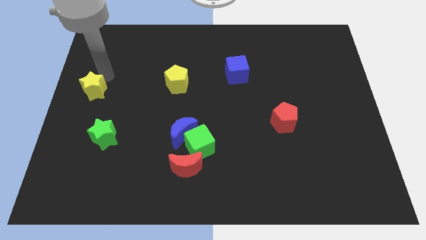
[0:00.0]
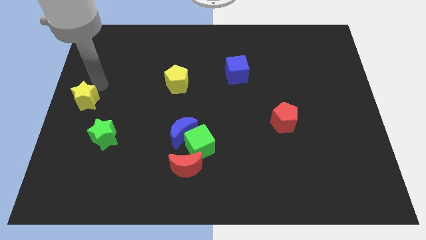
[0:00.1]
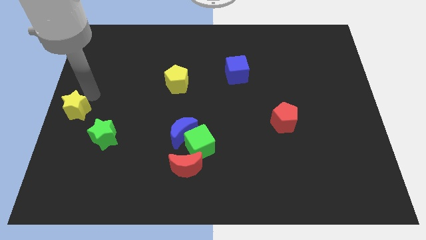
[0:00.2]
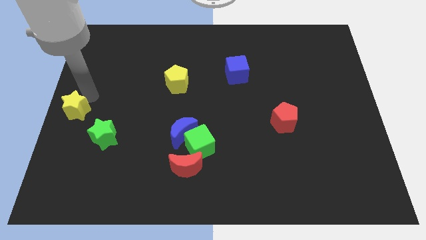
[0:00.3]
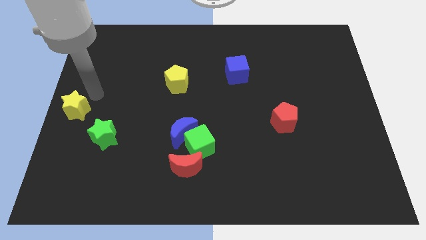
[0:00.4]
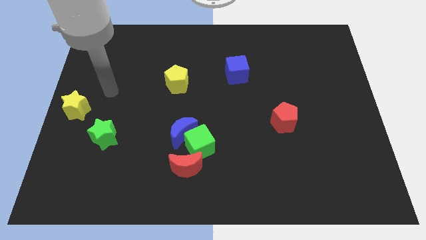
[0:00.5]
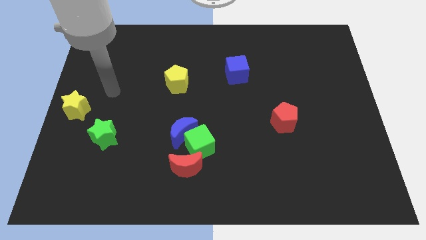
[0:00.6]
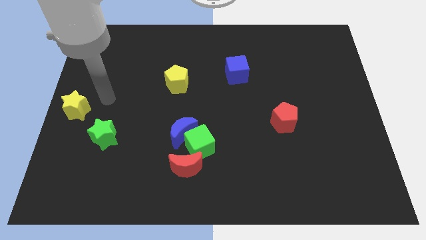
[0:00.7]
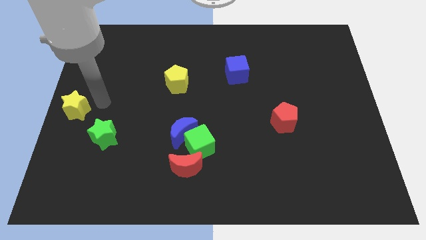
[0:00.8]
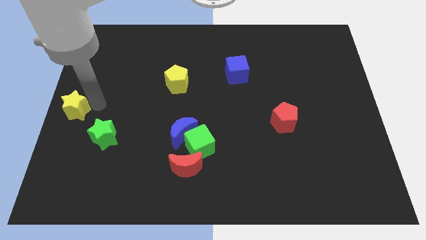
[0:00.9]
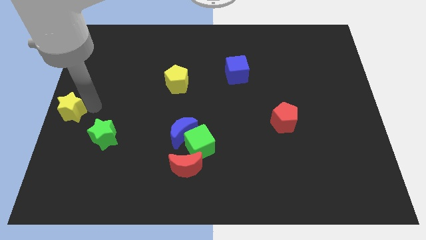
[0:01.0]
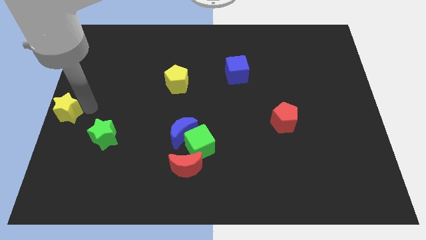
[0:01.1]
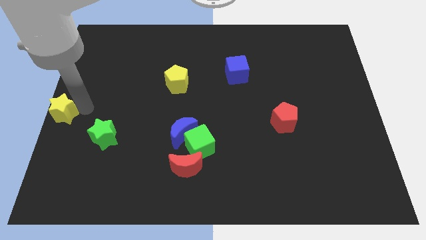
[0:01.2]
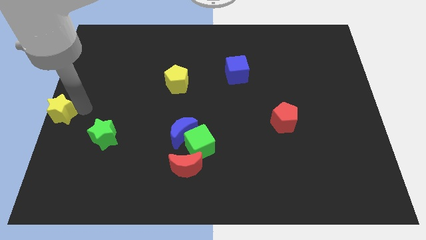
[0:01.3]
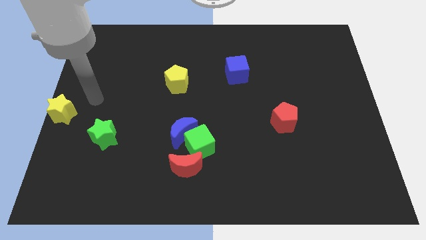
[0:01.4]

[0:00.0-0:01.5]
push the yellow star to the center left

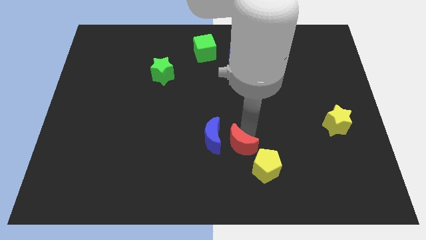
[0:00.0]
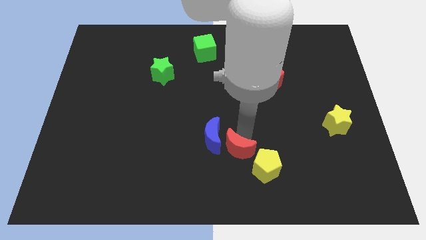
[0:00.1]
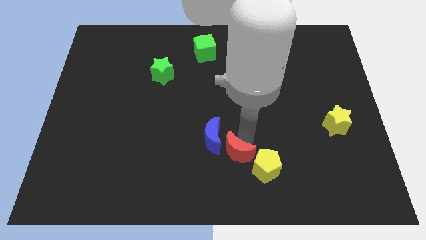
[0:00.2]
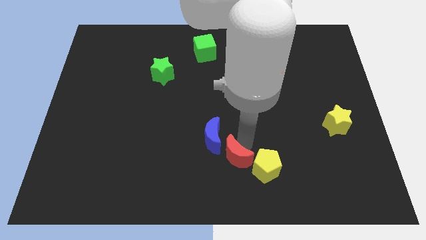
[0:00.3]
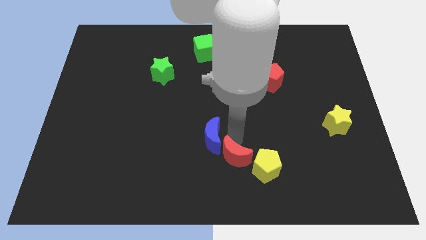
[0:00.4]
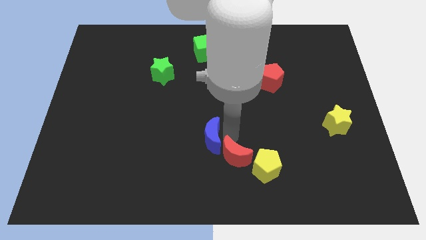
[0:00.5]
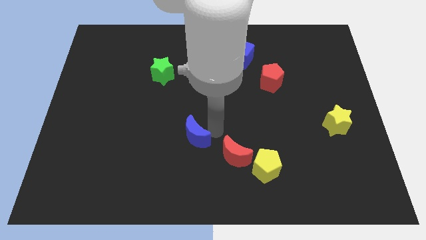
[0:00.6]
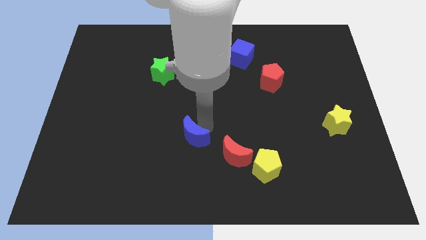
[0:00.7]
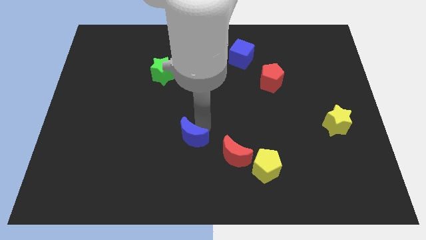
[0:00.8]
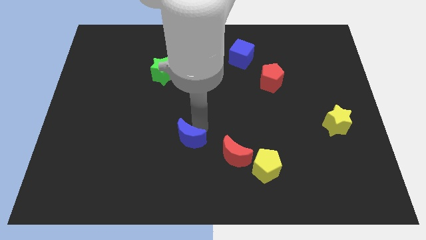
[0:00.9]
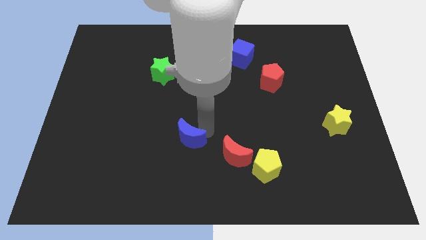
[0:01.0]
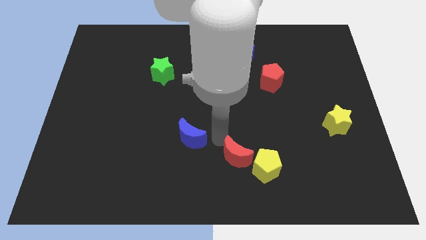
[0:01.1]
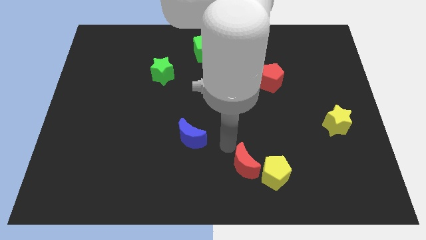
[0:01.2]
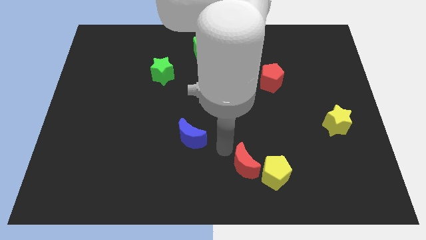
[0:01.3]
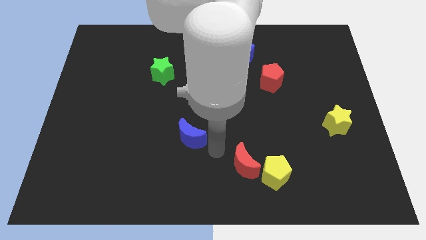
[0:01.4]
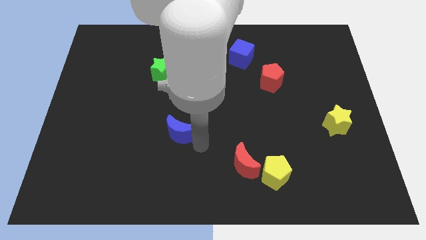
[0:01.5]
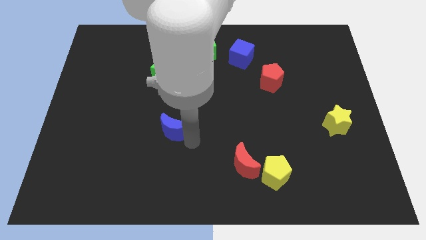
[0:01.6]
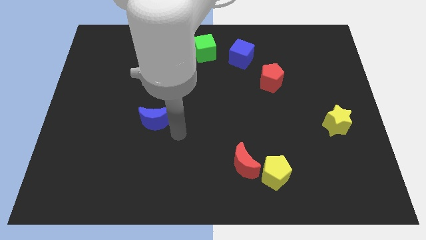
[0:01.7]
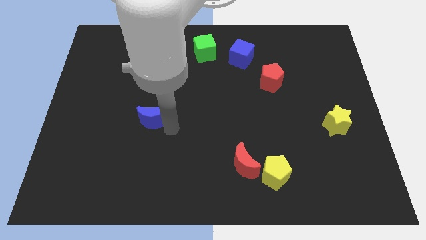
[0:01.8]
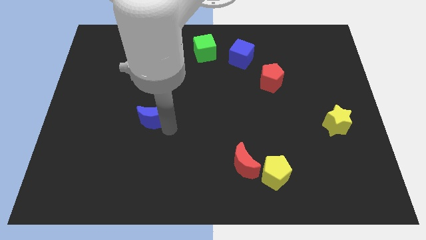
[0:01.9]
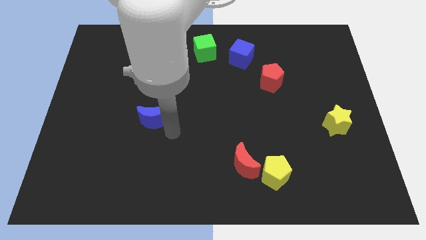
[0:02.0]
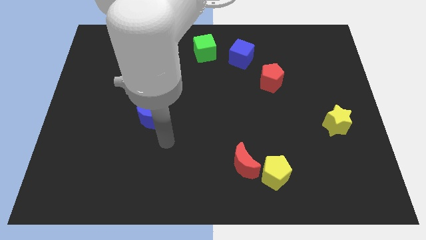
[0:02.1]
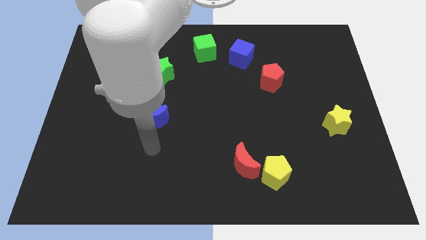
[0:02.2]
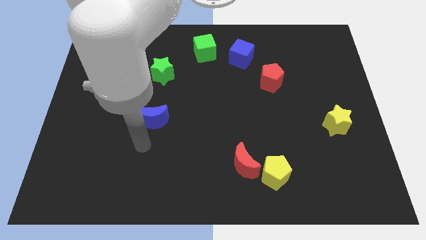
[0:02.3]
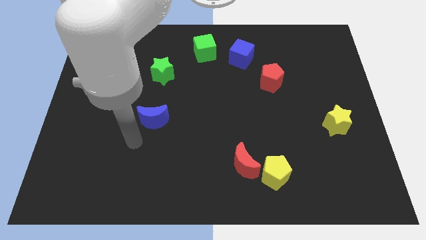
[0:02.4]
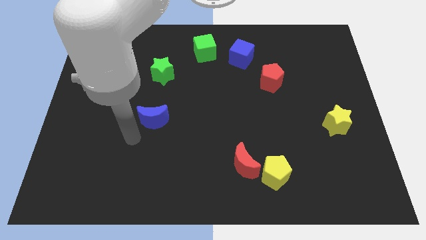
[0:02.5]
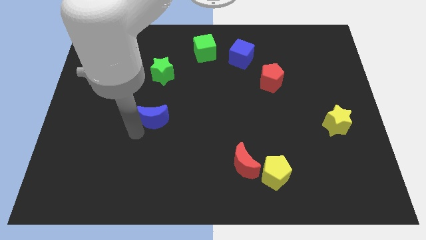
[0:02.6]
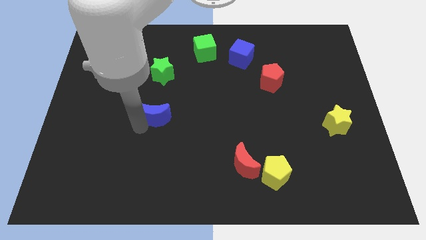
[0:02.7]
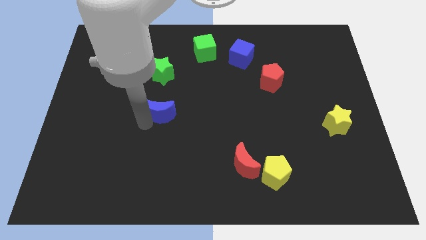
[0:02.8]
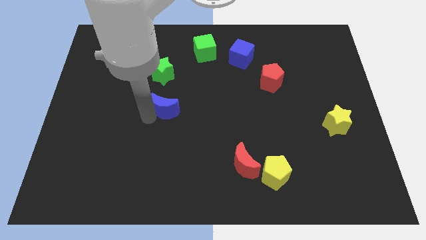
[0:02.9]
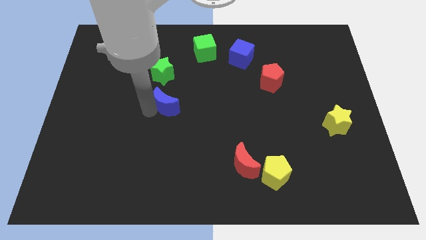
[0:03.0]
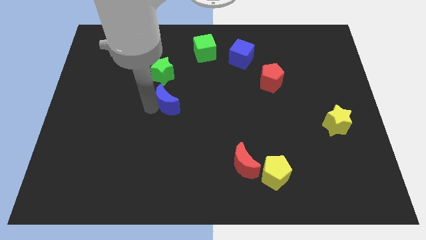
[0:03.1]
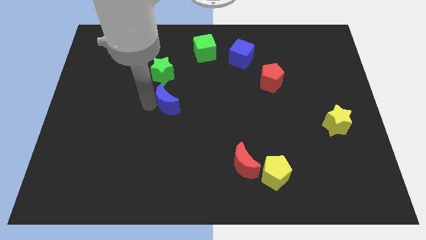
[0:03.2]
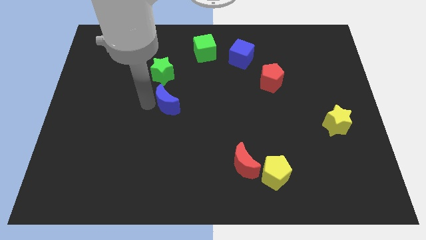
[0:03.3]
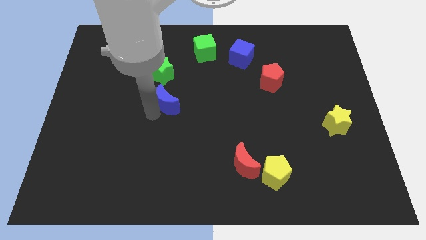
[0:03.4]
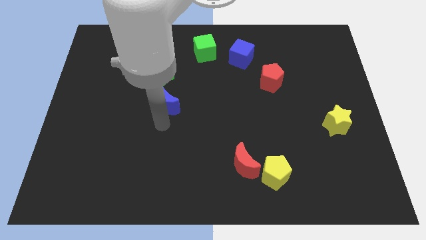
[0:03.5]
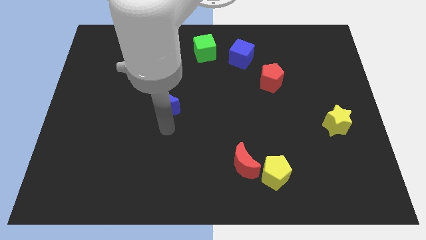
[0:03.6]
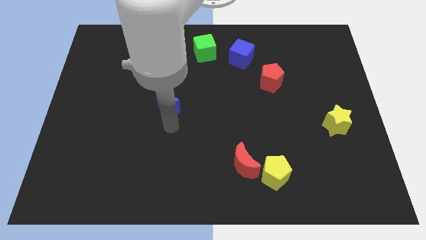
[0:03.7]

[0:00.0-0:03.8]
separate the blue crescent from the red moon

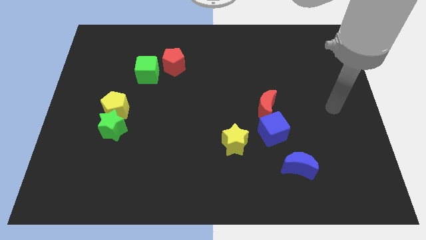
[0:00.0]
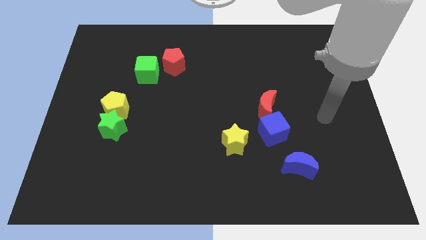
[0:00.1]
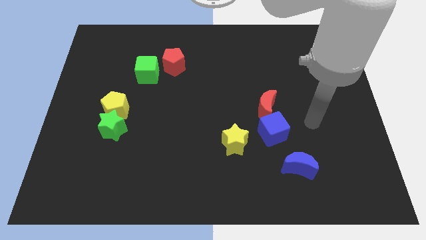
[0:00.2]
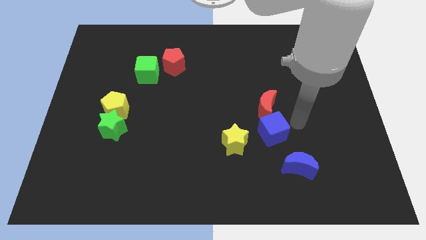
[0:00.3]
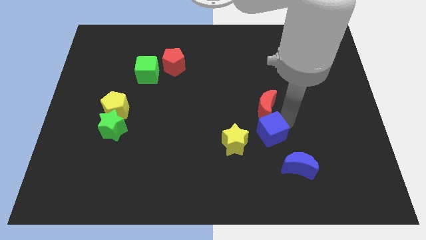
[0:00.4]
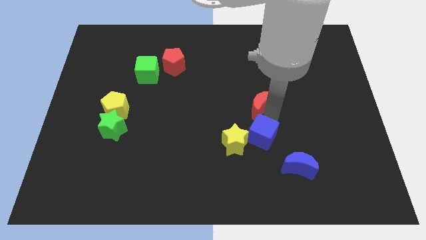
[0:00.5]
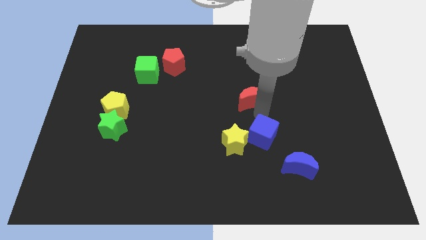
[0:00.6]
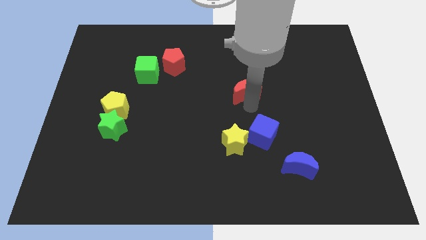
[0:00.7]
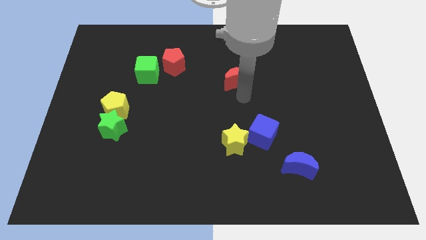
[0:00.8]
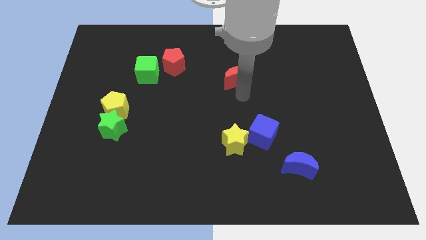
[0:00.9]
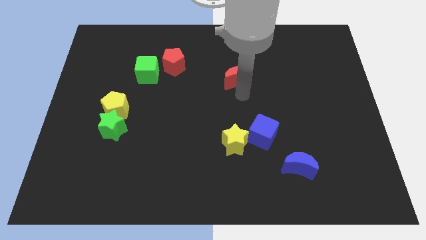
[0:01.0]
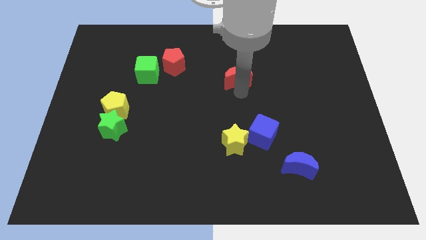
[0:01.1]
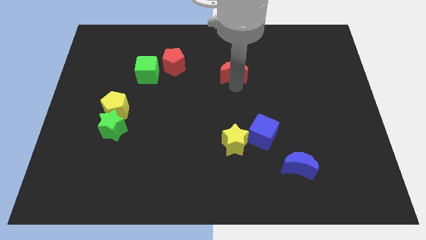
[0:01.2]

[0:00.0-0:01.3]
separate red moon from the blue cube

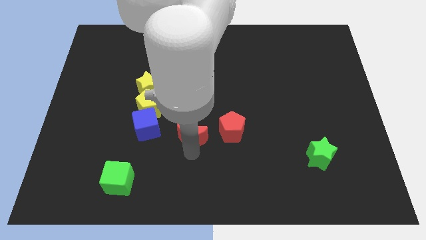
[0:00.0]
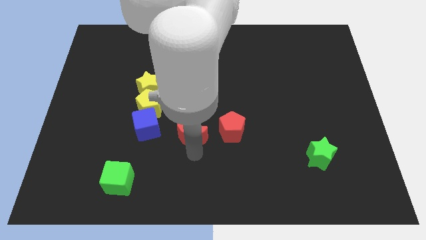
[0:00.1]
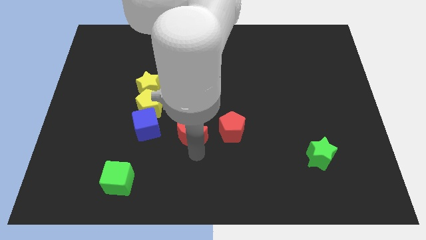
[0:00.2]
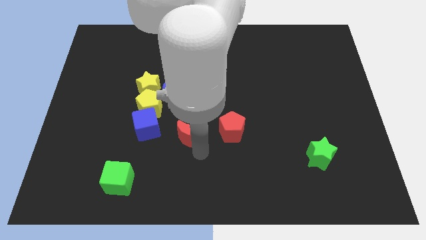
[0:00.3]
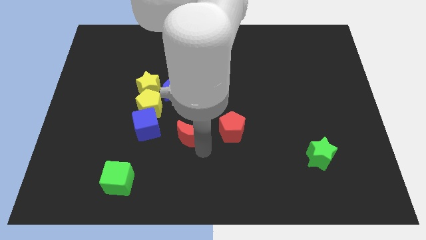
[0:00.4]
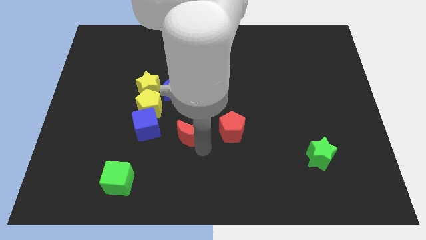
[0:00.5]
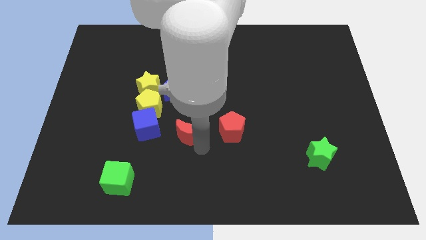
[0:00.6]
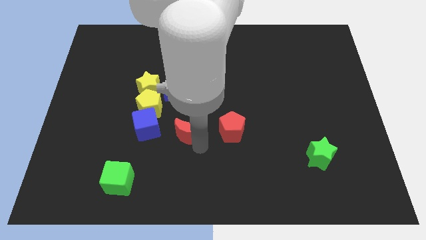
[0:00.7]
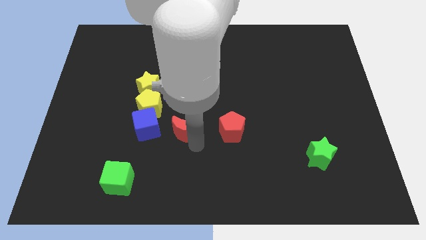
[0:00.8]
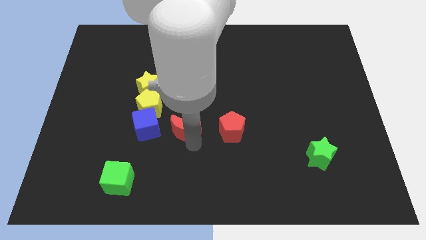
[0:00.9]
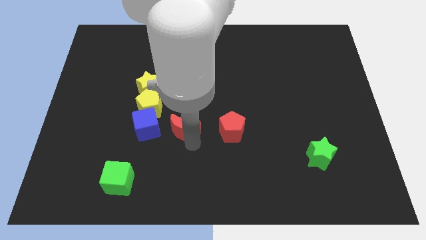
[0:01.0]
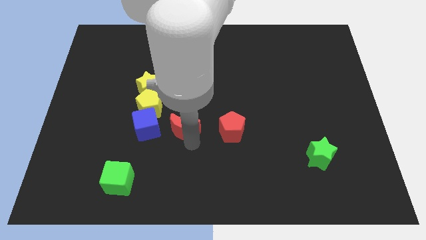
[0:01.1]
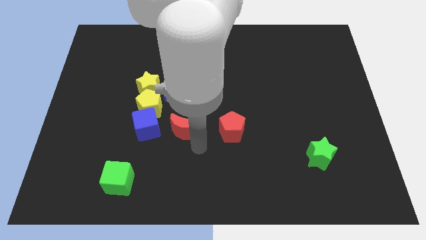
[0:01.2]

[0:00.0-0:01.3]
move red crescent to the right of blue cube

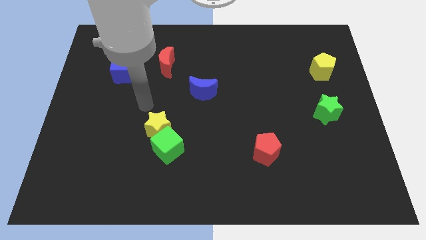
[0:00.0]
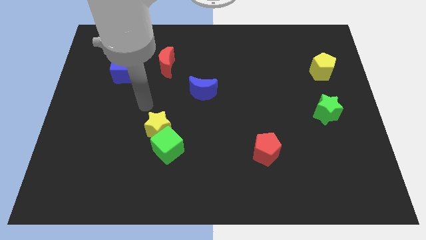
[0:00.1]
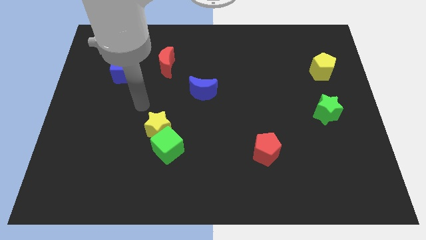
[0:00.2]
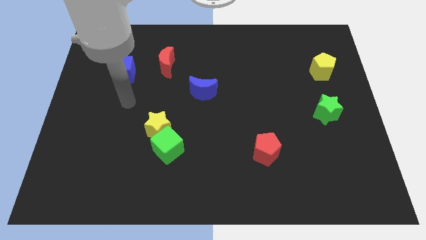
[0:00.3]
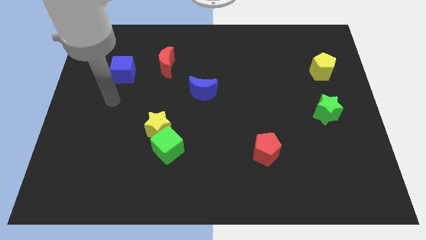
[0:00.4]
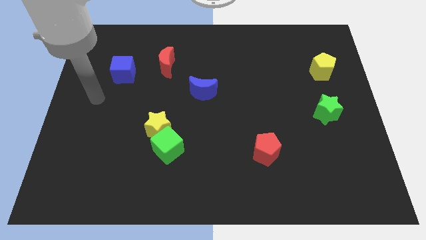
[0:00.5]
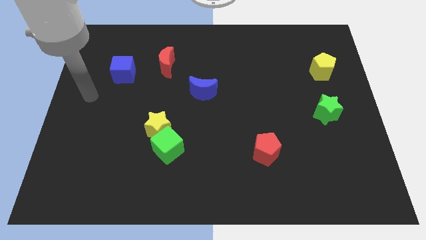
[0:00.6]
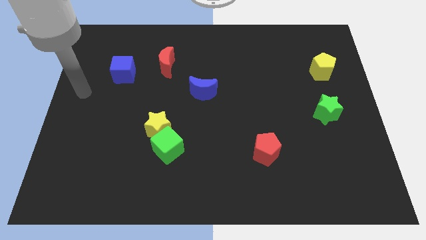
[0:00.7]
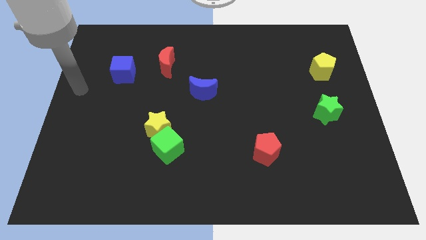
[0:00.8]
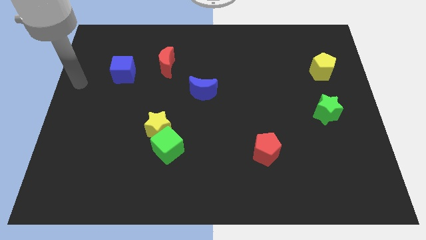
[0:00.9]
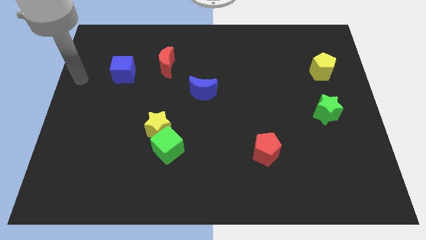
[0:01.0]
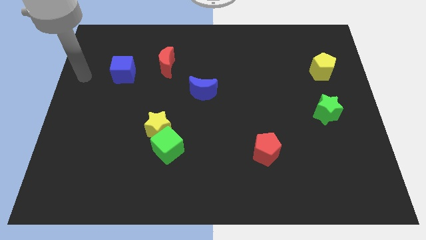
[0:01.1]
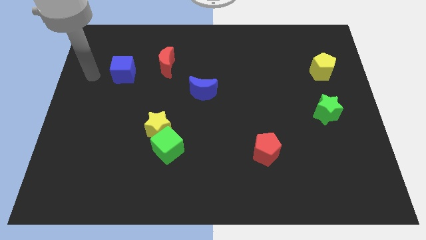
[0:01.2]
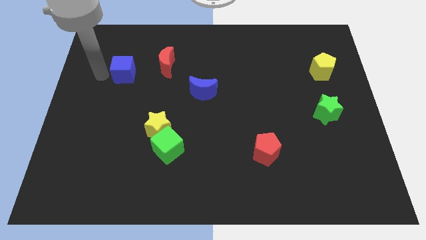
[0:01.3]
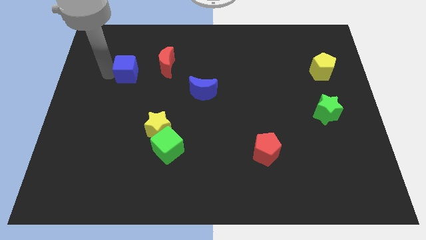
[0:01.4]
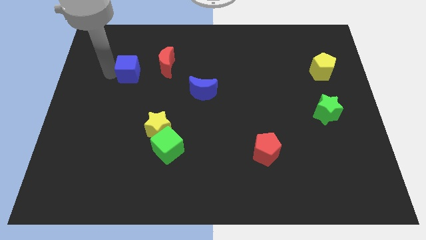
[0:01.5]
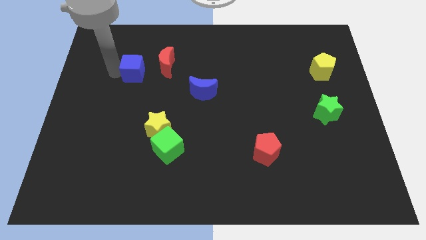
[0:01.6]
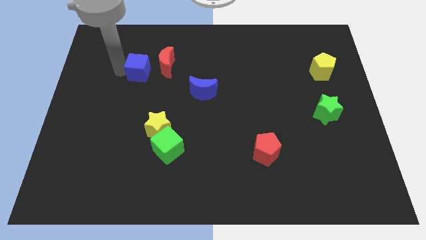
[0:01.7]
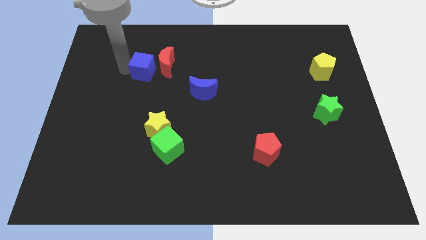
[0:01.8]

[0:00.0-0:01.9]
move blue cube to the left of red moon
